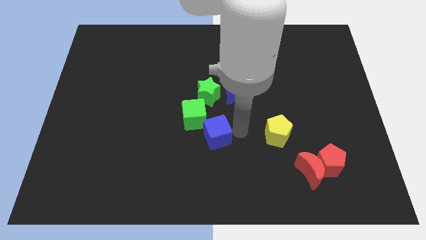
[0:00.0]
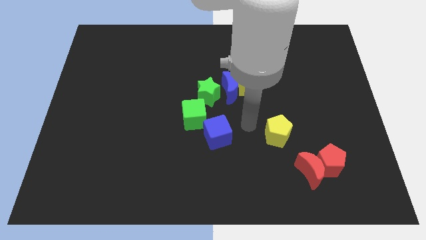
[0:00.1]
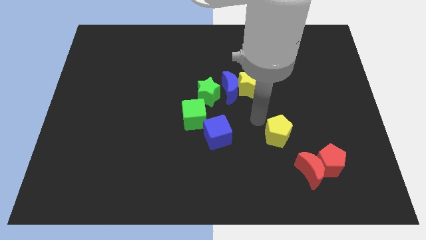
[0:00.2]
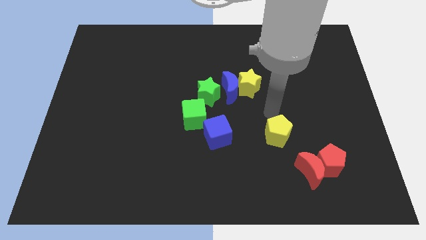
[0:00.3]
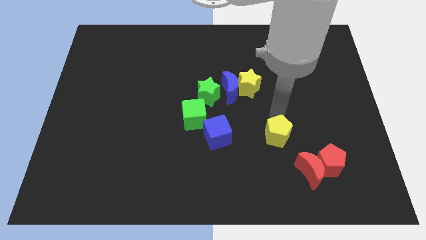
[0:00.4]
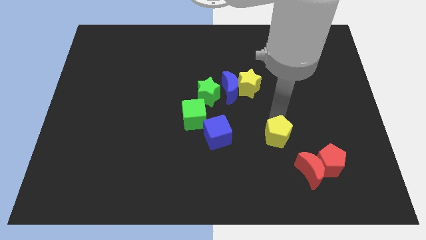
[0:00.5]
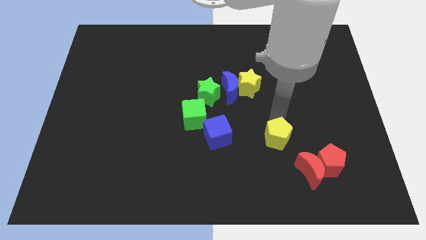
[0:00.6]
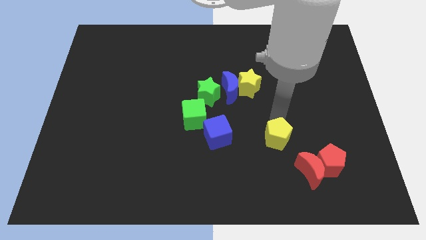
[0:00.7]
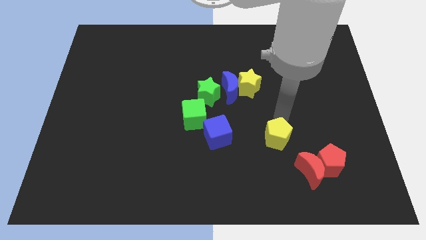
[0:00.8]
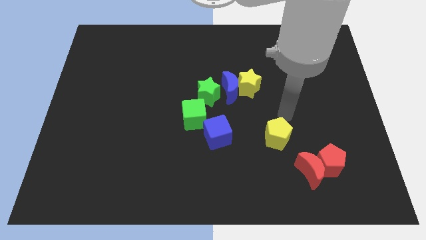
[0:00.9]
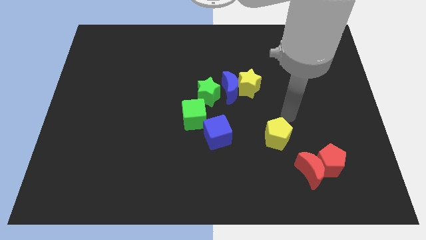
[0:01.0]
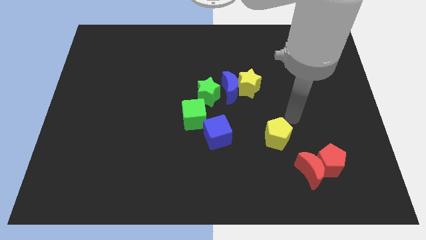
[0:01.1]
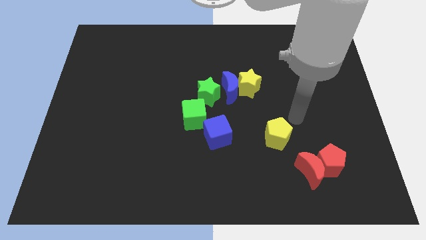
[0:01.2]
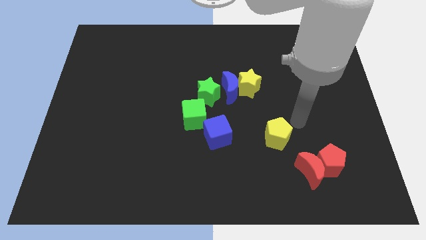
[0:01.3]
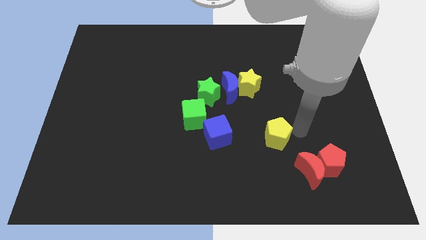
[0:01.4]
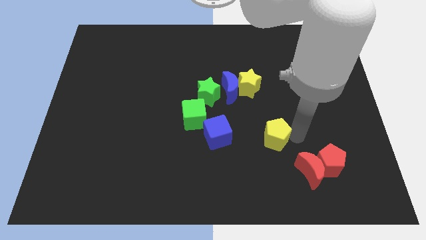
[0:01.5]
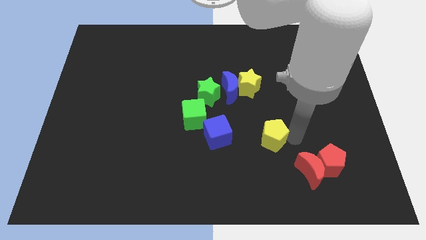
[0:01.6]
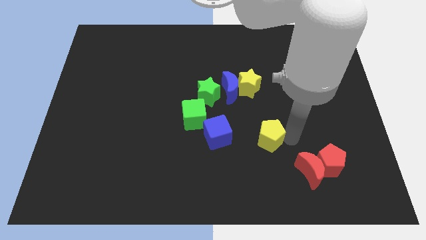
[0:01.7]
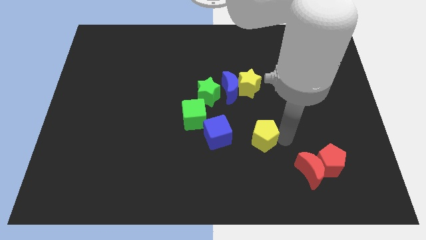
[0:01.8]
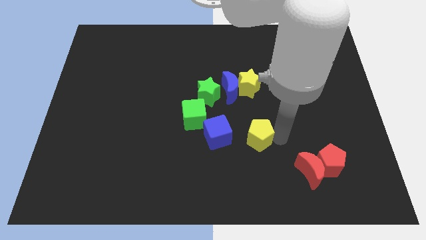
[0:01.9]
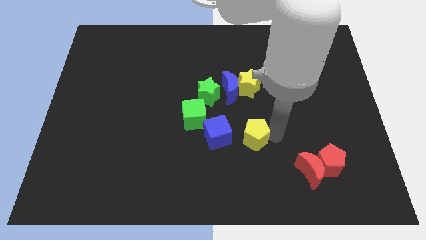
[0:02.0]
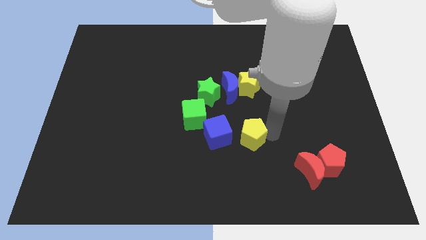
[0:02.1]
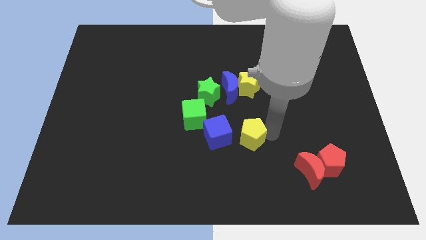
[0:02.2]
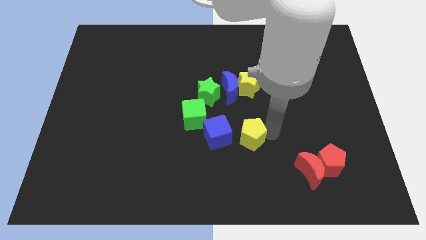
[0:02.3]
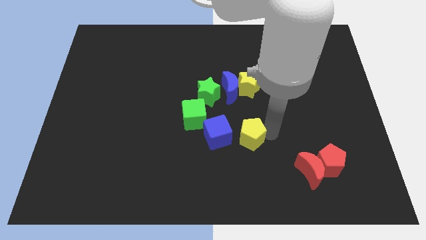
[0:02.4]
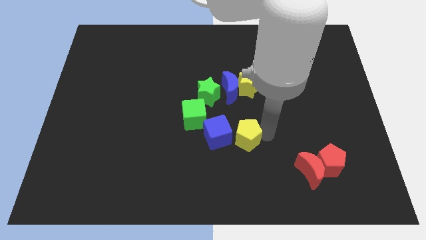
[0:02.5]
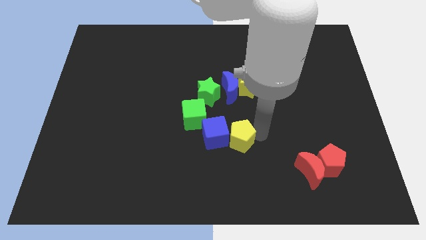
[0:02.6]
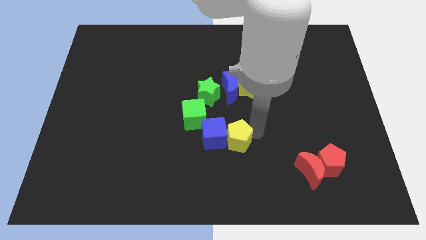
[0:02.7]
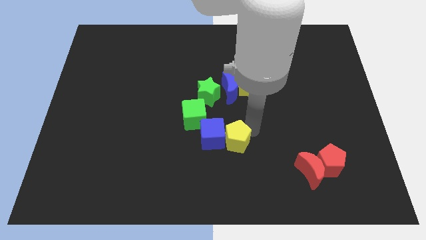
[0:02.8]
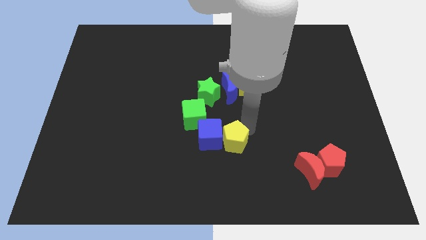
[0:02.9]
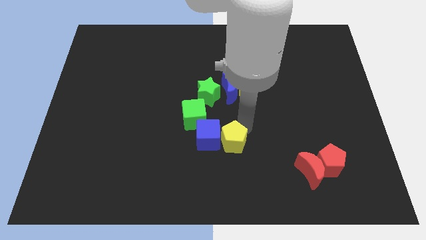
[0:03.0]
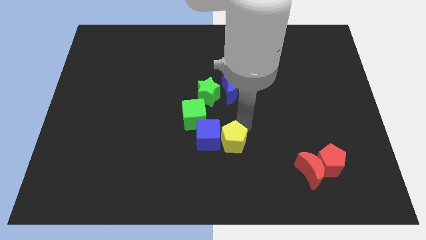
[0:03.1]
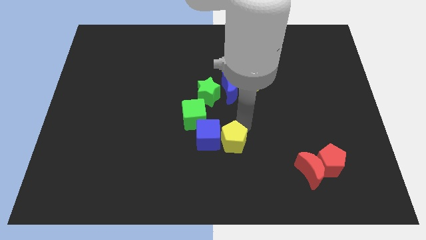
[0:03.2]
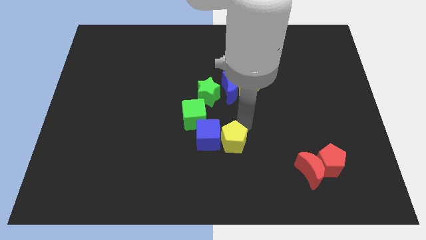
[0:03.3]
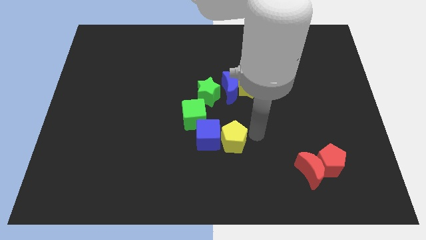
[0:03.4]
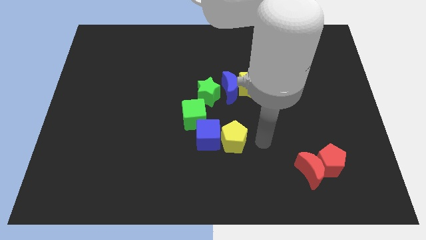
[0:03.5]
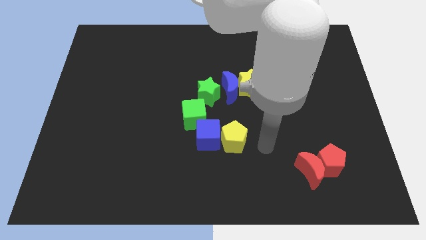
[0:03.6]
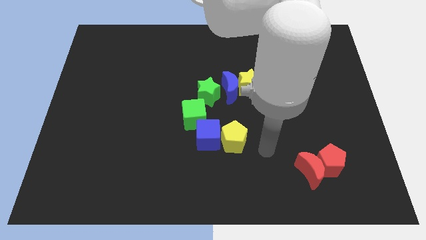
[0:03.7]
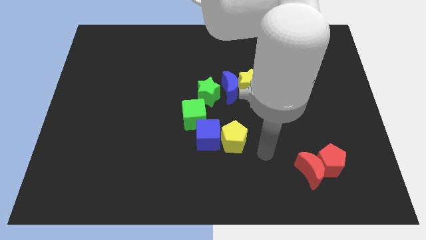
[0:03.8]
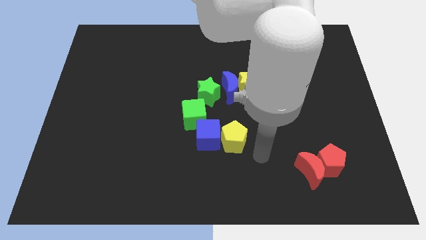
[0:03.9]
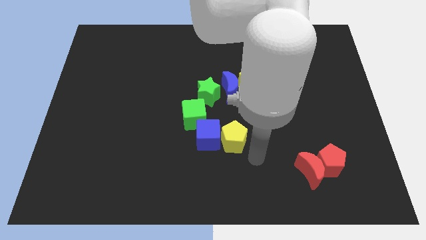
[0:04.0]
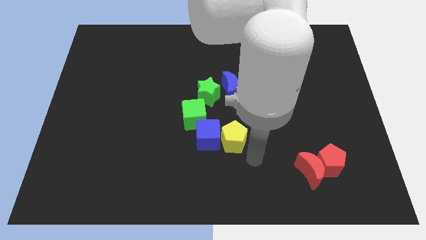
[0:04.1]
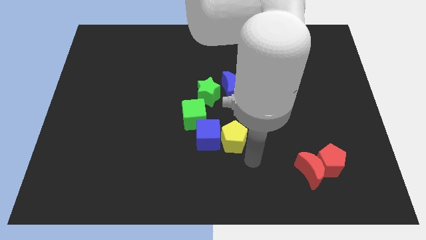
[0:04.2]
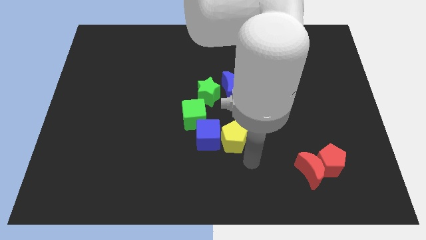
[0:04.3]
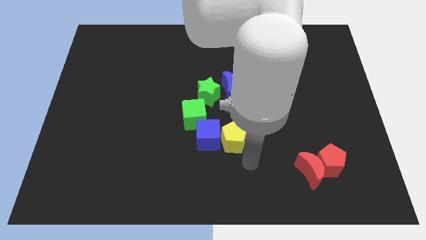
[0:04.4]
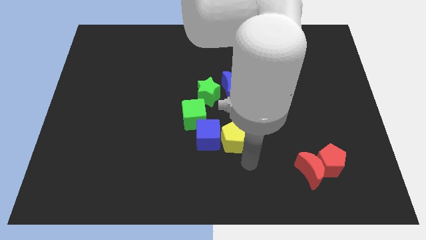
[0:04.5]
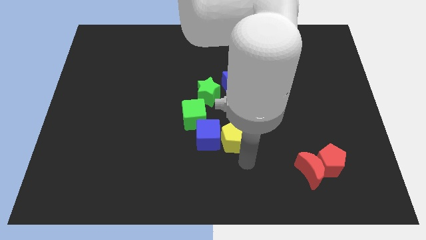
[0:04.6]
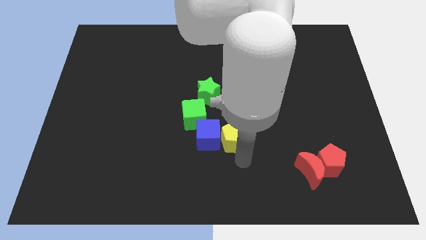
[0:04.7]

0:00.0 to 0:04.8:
move the yellow pentagon right side of blue cube

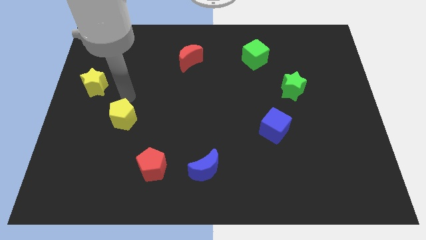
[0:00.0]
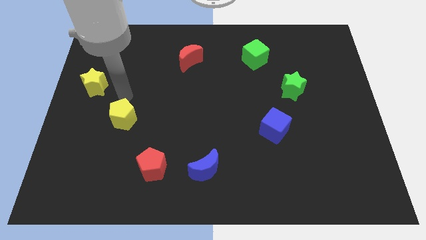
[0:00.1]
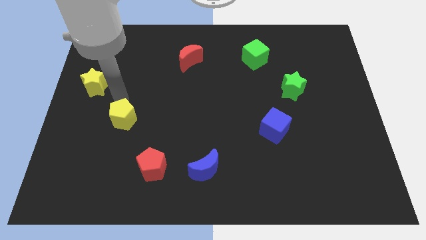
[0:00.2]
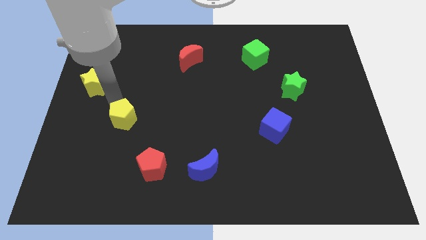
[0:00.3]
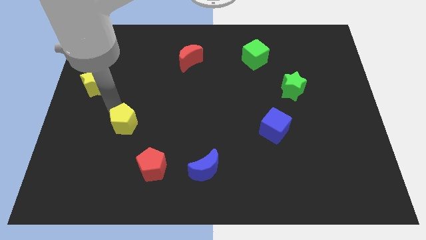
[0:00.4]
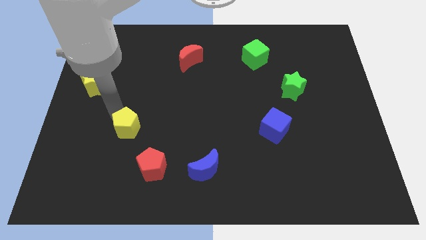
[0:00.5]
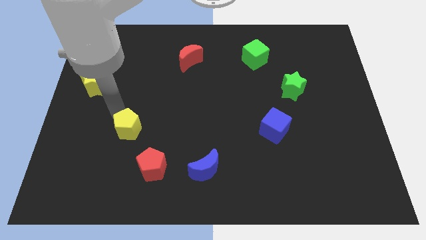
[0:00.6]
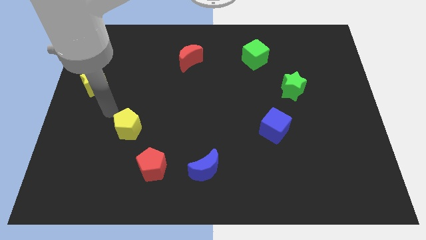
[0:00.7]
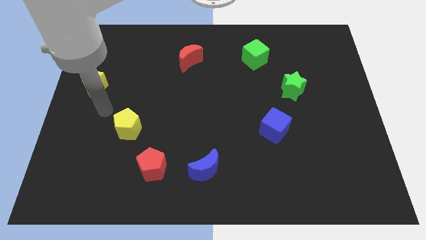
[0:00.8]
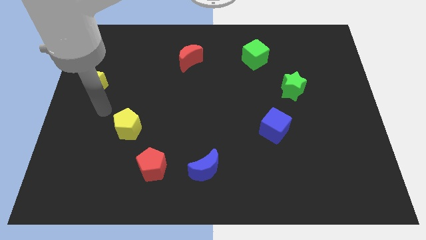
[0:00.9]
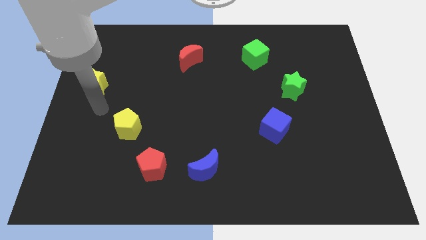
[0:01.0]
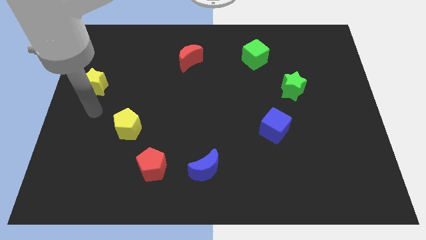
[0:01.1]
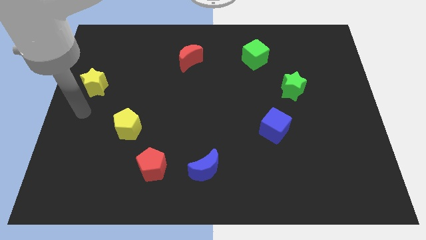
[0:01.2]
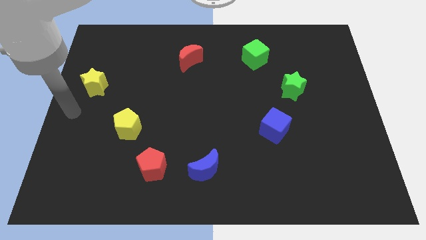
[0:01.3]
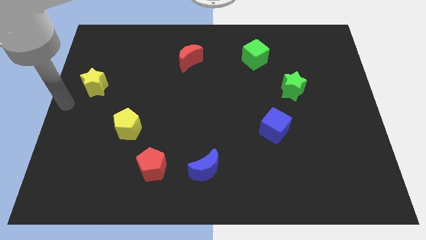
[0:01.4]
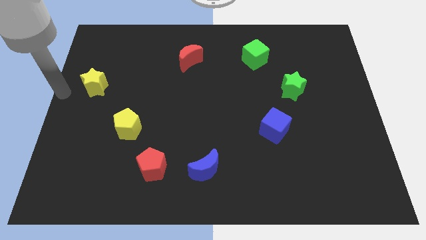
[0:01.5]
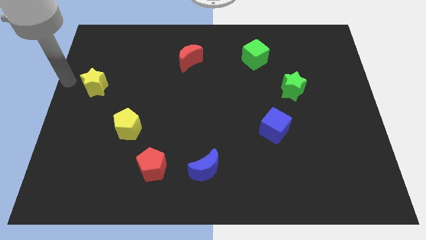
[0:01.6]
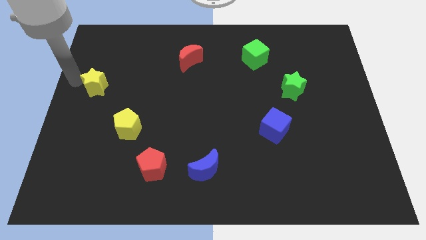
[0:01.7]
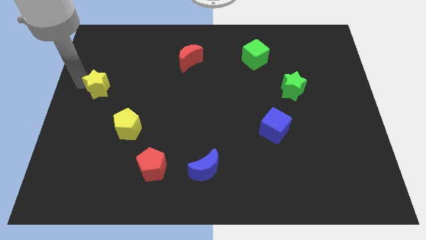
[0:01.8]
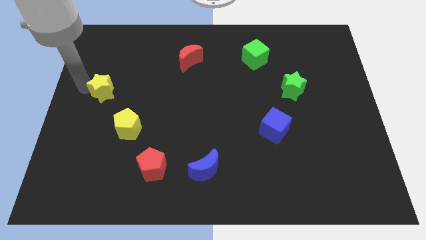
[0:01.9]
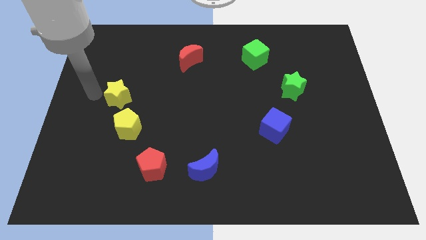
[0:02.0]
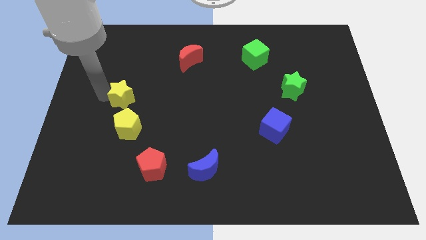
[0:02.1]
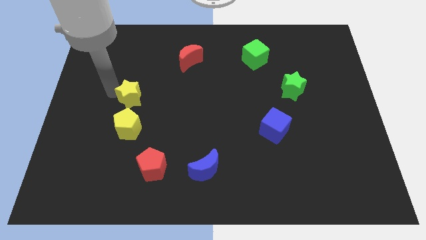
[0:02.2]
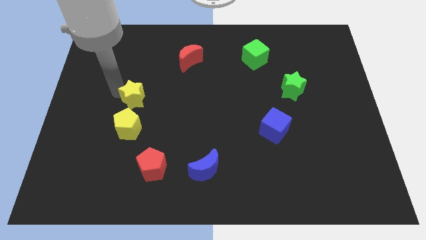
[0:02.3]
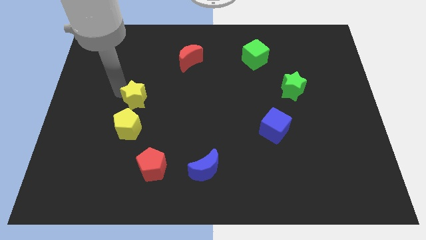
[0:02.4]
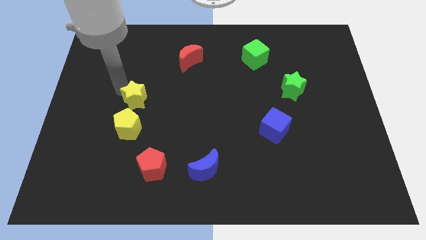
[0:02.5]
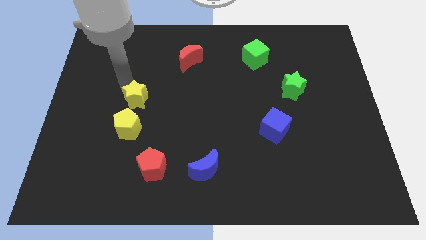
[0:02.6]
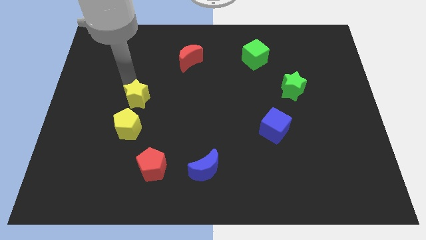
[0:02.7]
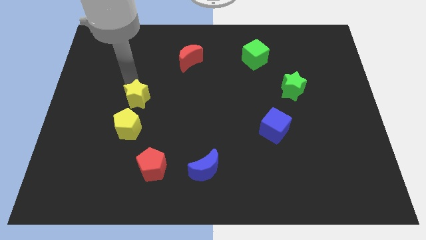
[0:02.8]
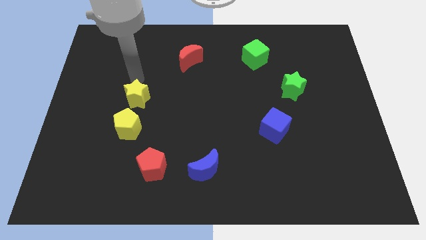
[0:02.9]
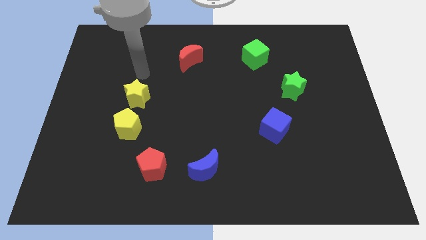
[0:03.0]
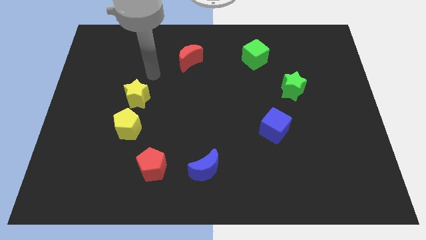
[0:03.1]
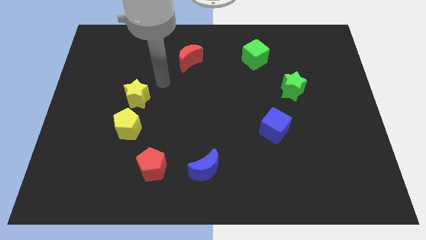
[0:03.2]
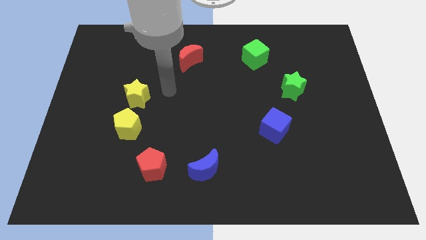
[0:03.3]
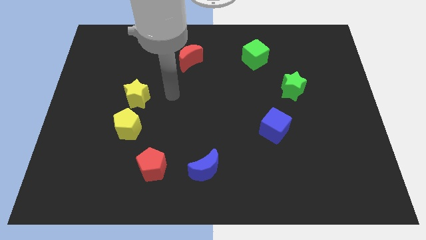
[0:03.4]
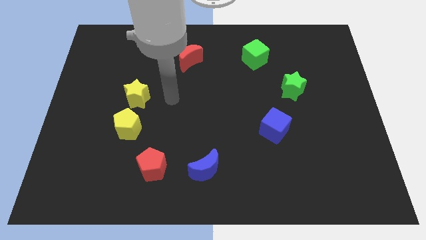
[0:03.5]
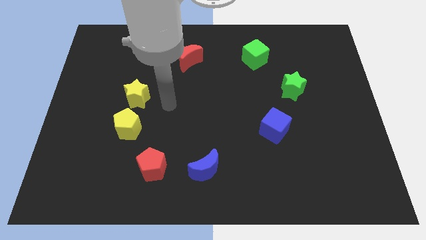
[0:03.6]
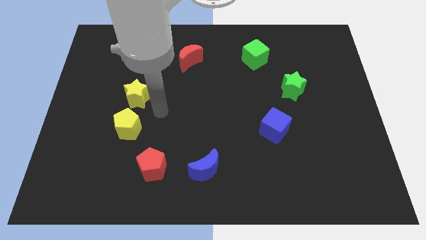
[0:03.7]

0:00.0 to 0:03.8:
push the yellow star downward

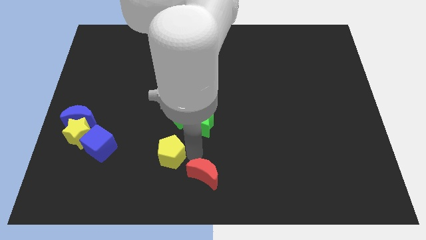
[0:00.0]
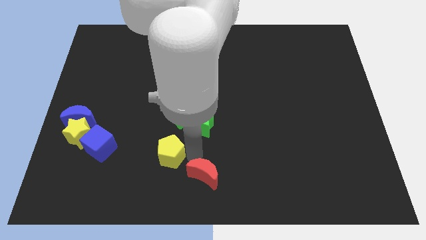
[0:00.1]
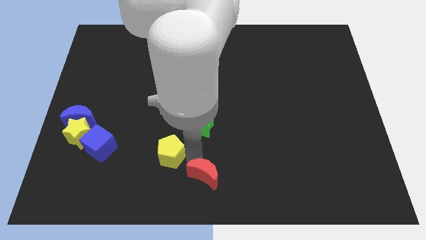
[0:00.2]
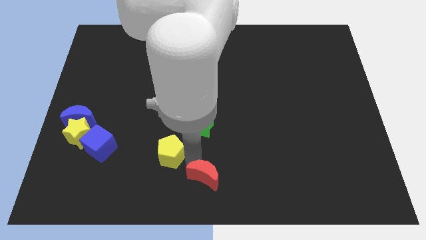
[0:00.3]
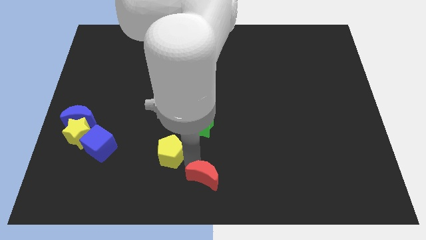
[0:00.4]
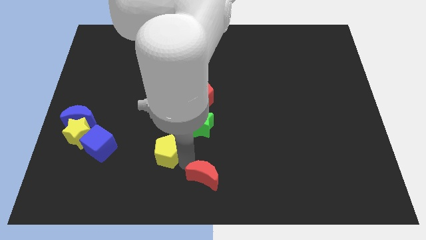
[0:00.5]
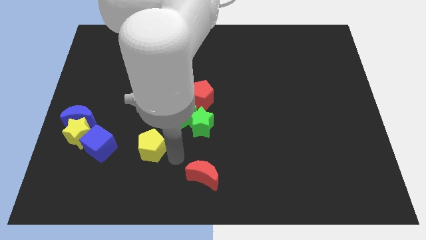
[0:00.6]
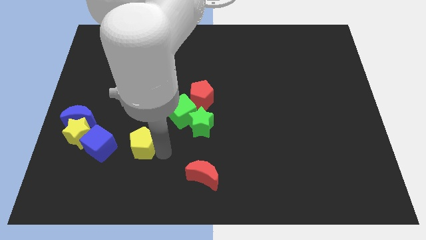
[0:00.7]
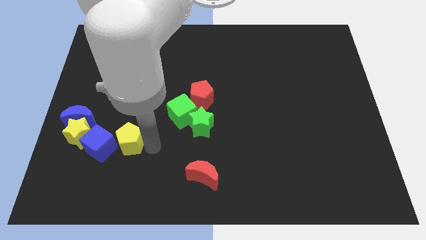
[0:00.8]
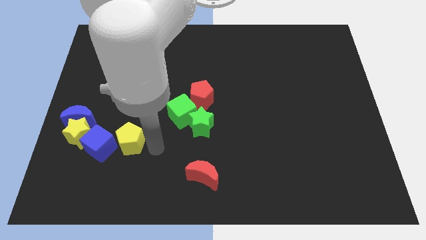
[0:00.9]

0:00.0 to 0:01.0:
separate the yellow pentagon from the red moon
